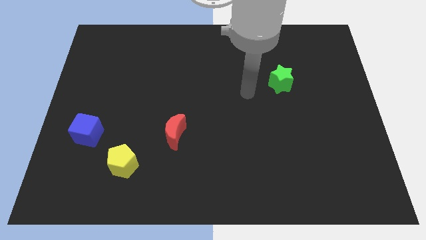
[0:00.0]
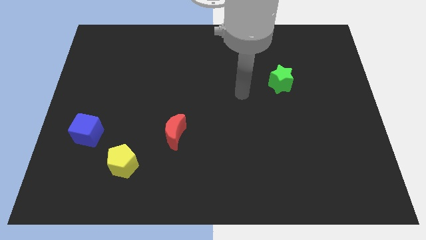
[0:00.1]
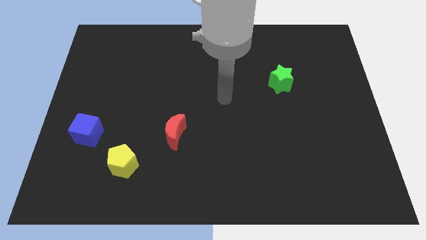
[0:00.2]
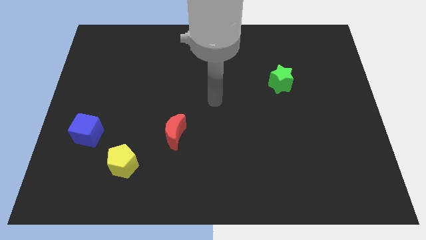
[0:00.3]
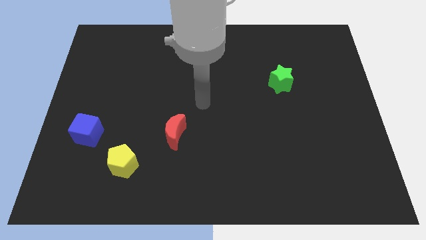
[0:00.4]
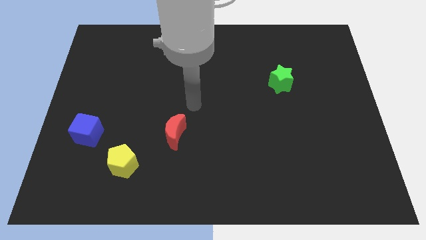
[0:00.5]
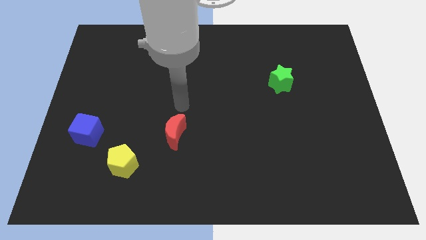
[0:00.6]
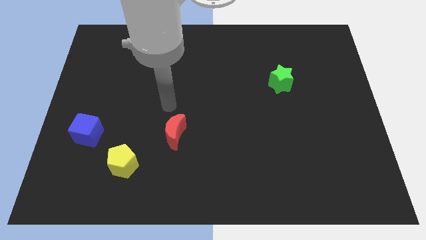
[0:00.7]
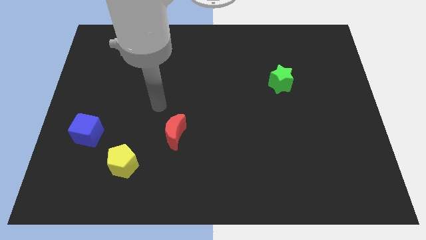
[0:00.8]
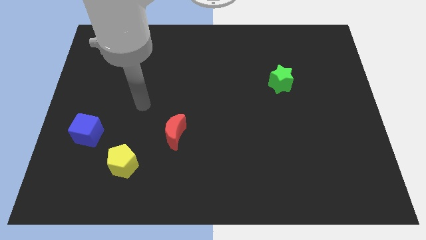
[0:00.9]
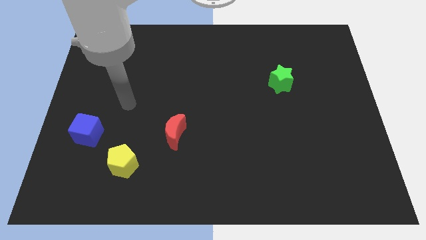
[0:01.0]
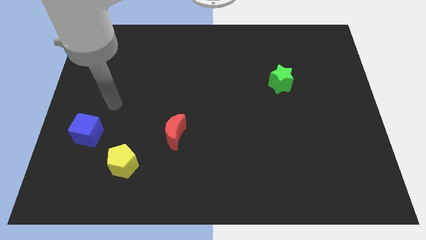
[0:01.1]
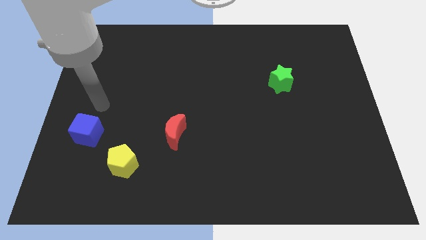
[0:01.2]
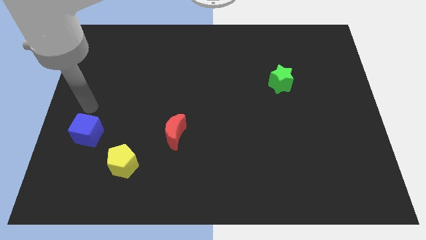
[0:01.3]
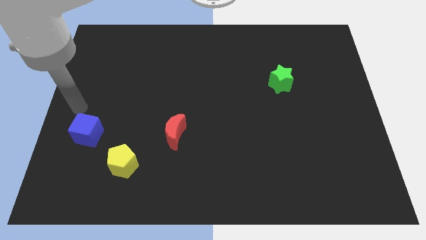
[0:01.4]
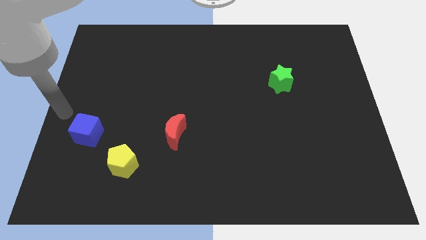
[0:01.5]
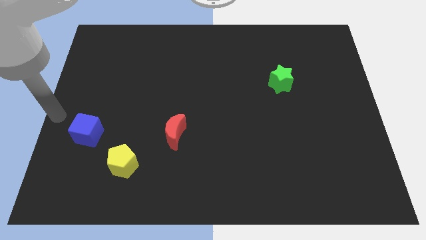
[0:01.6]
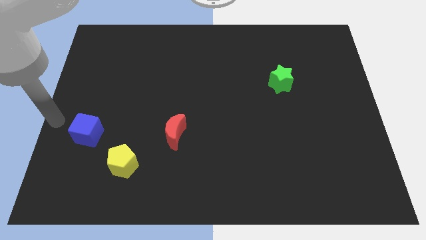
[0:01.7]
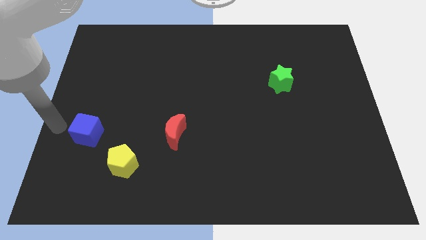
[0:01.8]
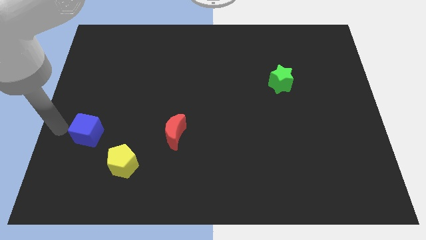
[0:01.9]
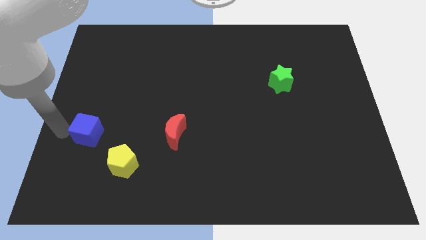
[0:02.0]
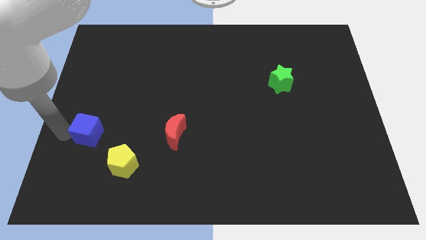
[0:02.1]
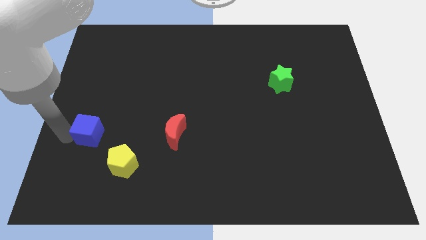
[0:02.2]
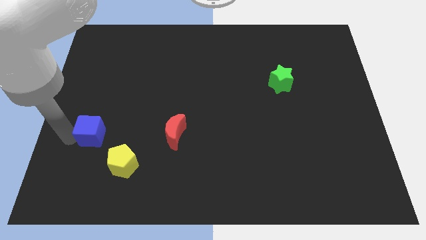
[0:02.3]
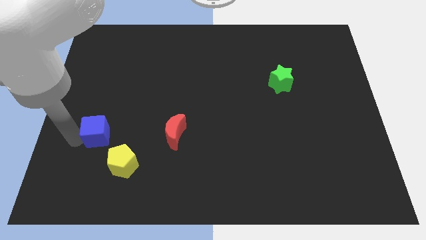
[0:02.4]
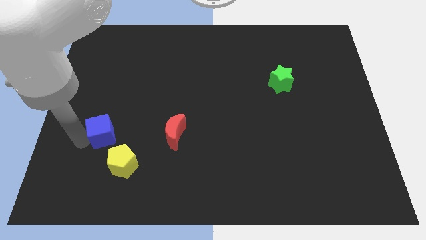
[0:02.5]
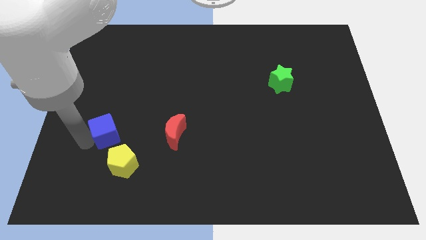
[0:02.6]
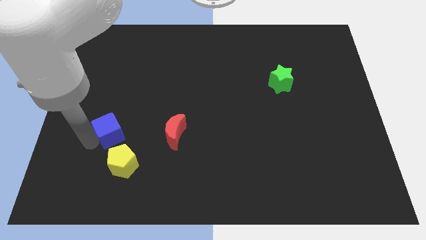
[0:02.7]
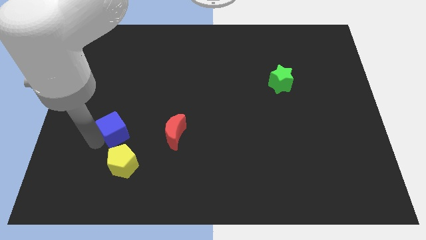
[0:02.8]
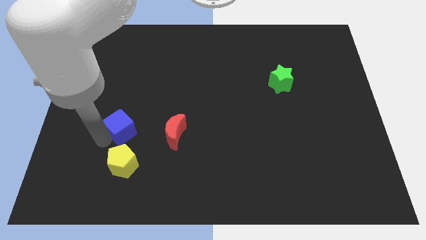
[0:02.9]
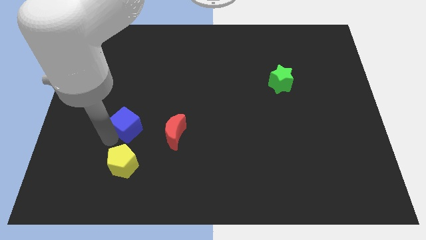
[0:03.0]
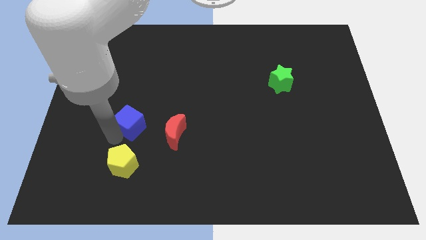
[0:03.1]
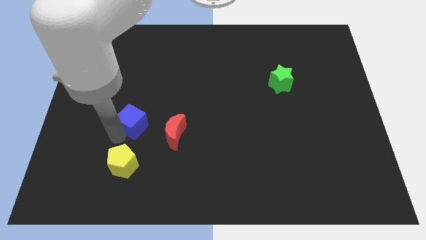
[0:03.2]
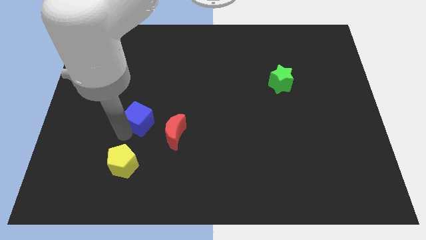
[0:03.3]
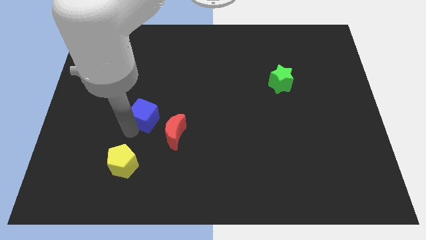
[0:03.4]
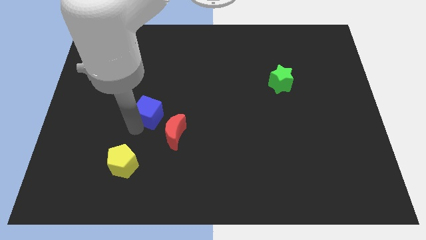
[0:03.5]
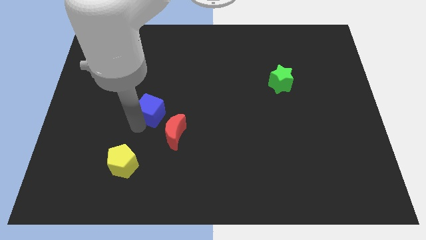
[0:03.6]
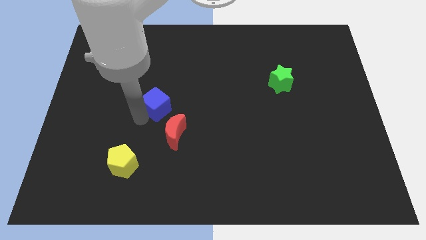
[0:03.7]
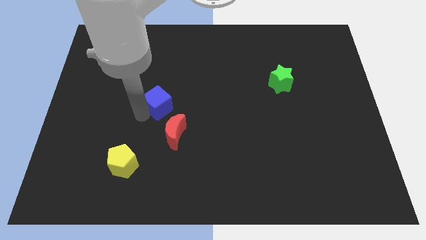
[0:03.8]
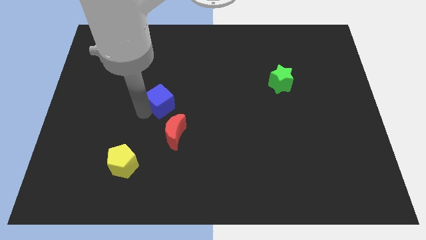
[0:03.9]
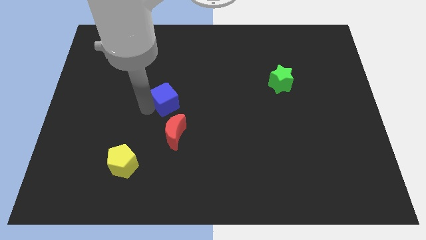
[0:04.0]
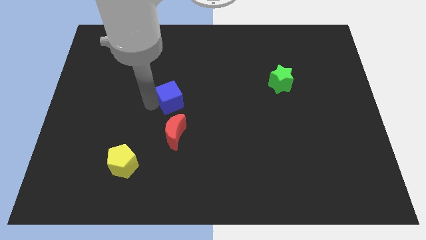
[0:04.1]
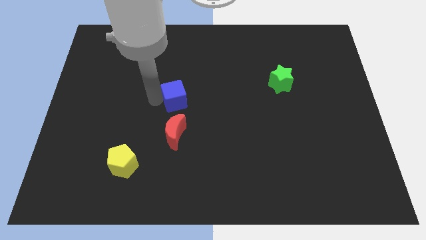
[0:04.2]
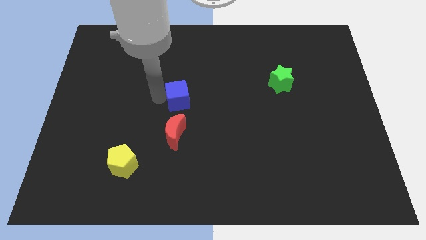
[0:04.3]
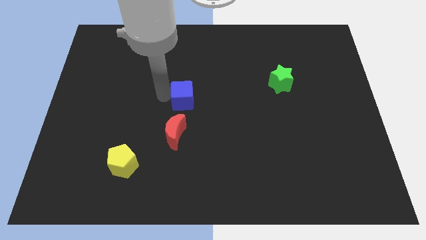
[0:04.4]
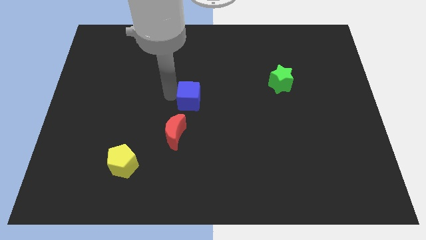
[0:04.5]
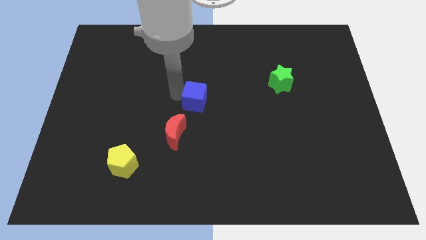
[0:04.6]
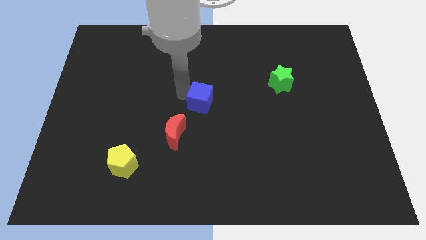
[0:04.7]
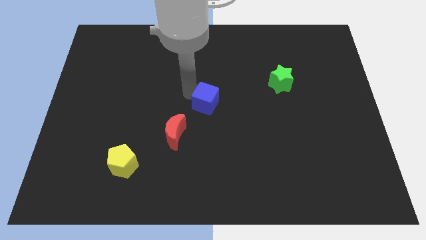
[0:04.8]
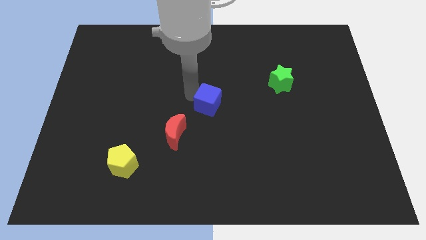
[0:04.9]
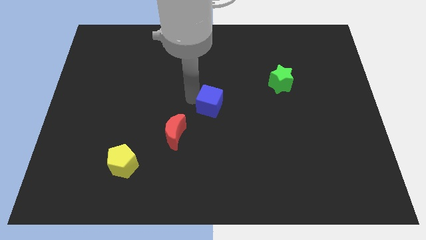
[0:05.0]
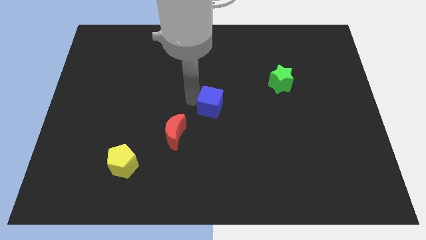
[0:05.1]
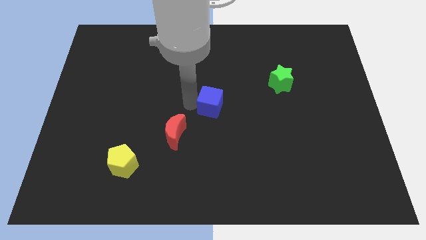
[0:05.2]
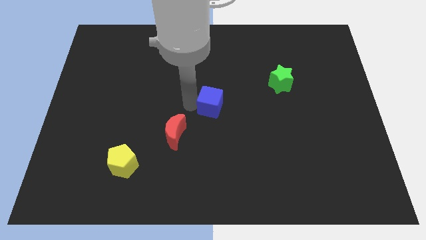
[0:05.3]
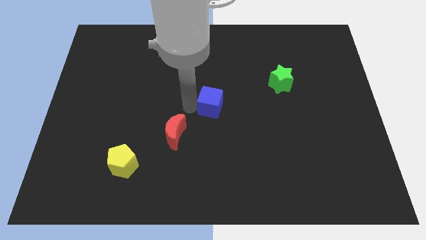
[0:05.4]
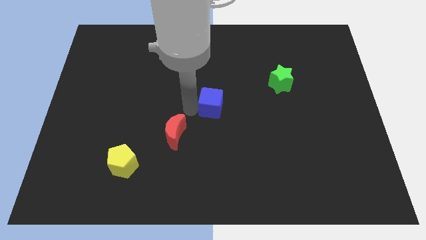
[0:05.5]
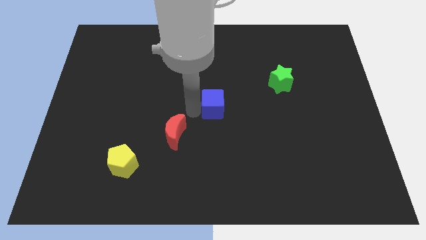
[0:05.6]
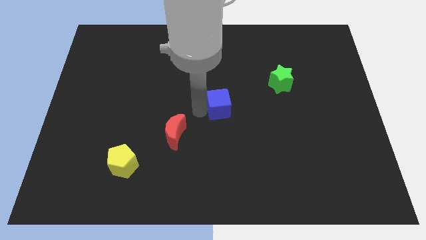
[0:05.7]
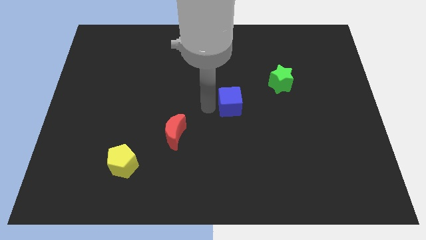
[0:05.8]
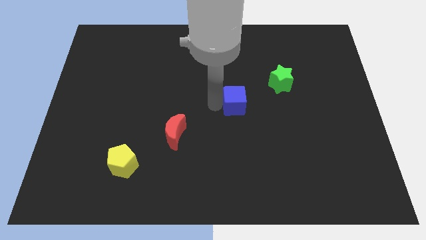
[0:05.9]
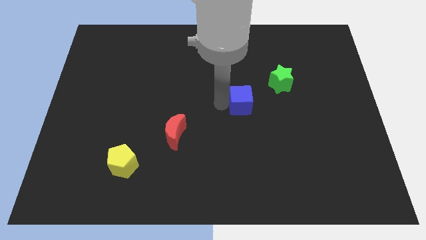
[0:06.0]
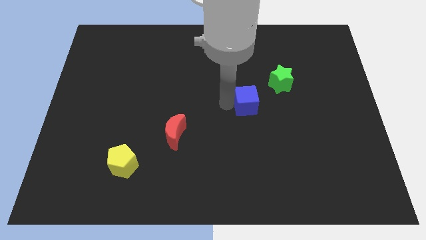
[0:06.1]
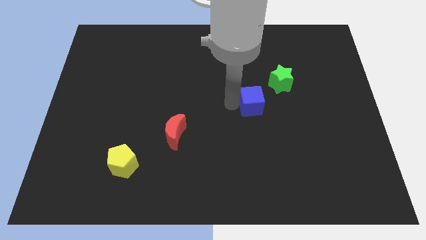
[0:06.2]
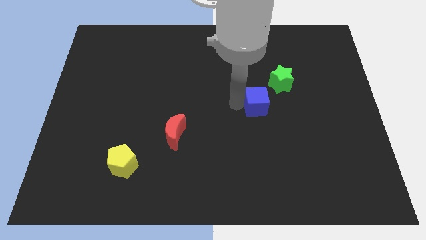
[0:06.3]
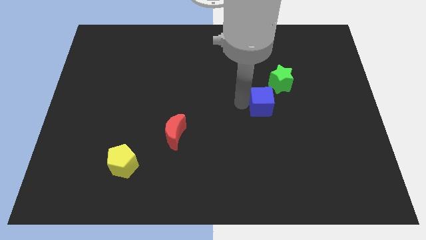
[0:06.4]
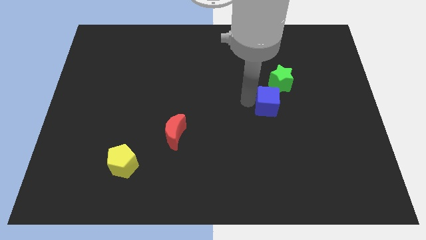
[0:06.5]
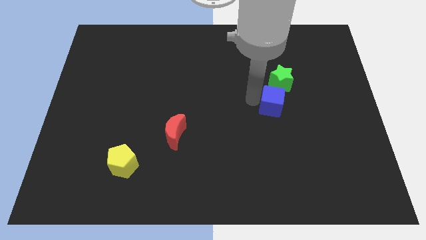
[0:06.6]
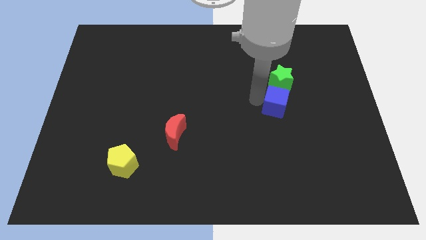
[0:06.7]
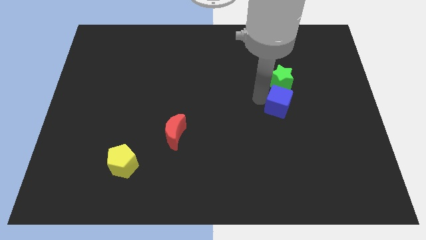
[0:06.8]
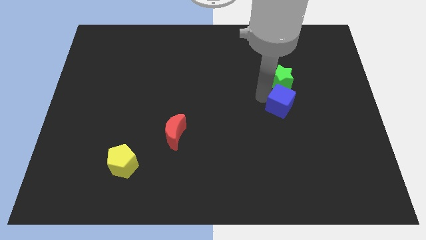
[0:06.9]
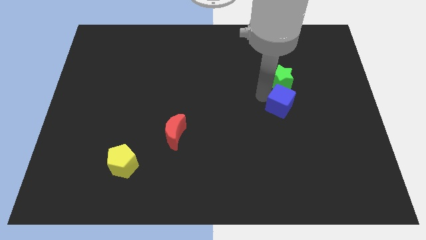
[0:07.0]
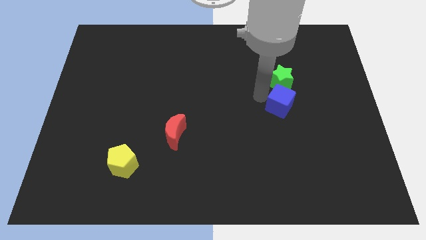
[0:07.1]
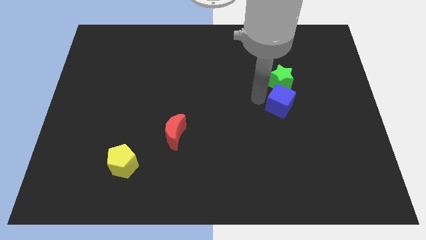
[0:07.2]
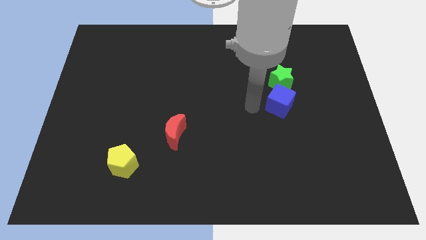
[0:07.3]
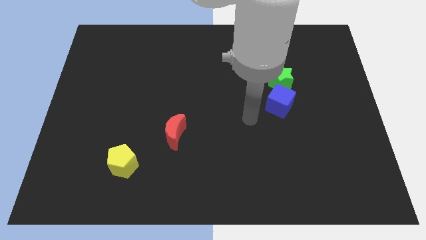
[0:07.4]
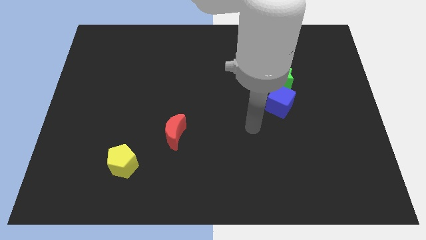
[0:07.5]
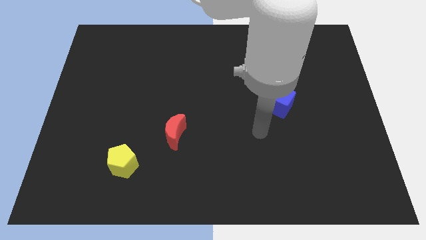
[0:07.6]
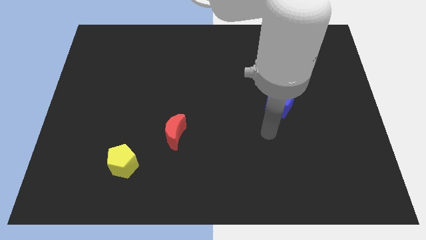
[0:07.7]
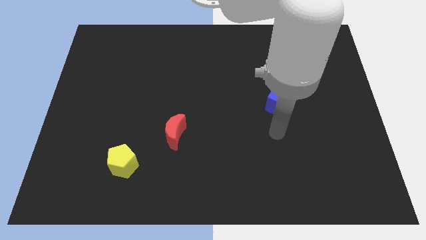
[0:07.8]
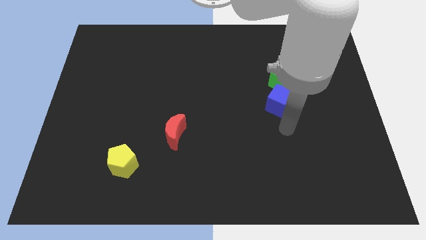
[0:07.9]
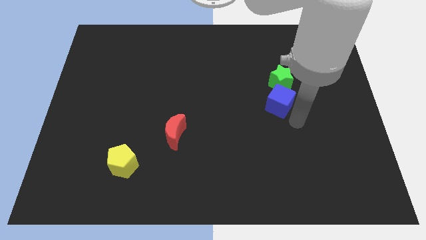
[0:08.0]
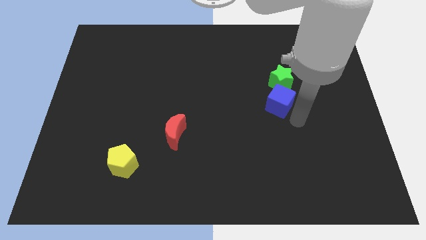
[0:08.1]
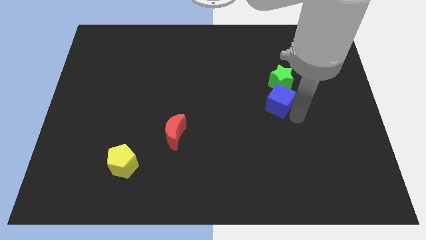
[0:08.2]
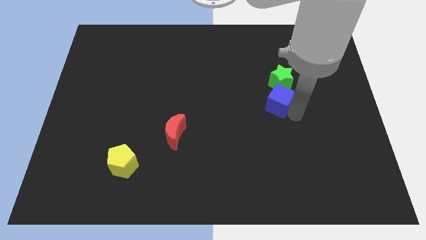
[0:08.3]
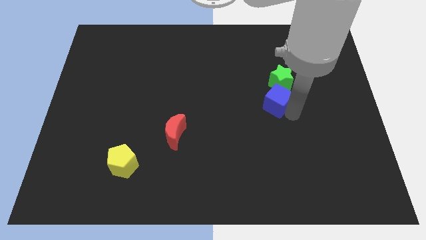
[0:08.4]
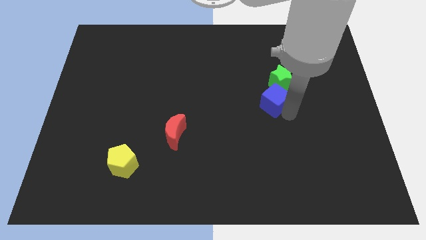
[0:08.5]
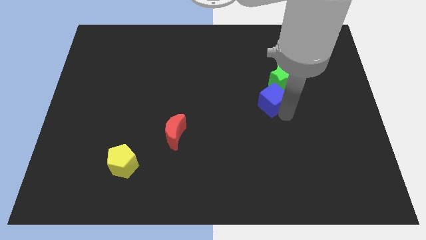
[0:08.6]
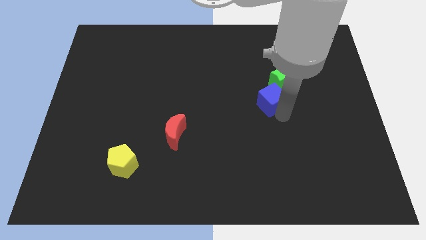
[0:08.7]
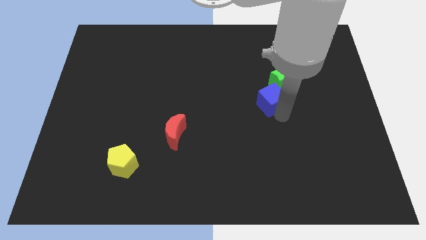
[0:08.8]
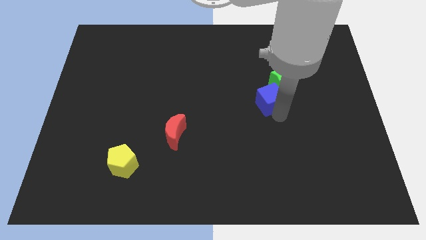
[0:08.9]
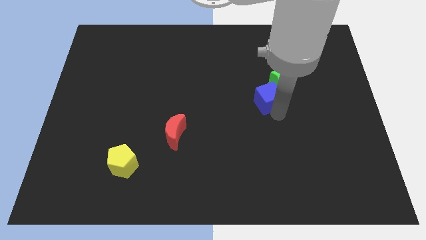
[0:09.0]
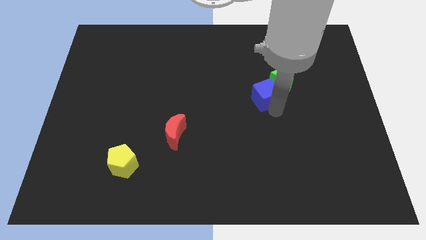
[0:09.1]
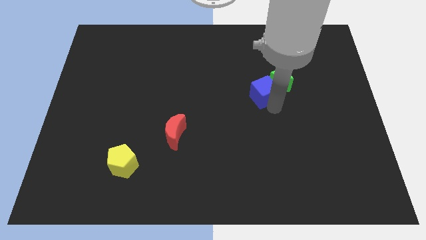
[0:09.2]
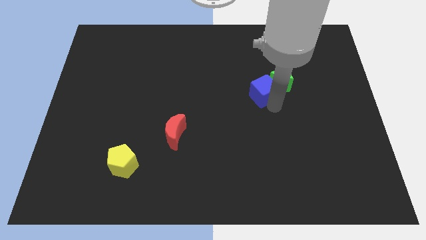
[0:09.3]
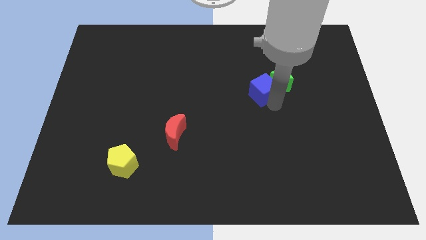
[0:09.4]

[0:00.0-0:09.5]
put the blue cube towards the star
